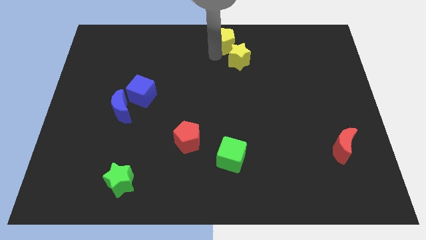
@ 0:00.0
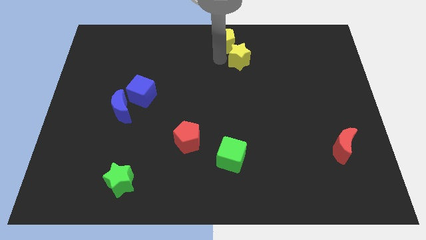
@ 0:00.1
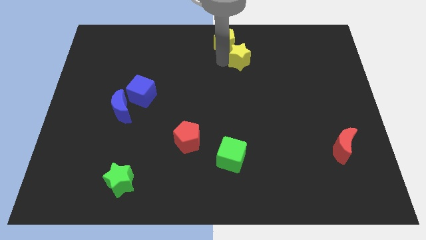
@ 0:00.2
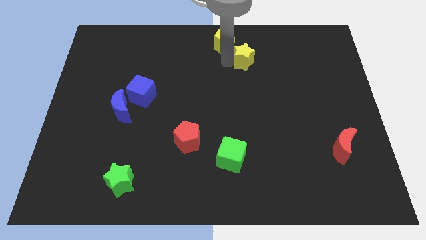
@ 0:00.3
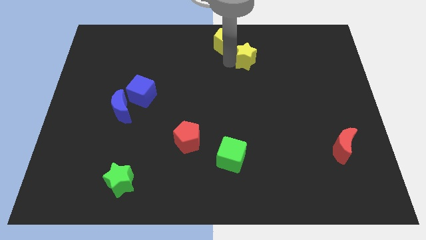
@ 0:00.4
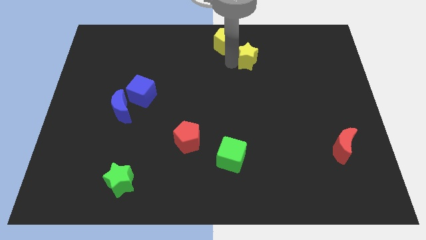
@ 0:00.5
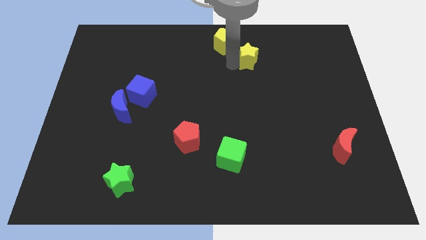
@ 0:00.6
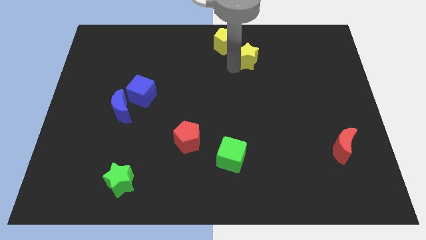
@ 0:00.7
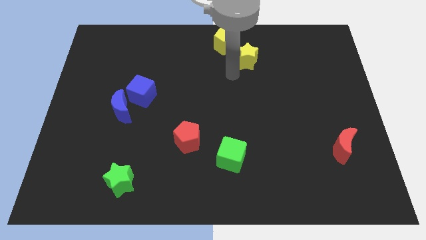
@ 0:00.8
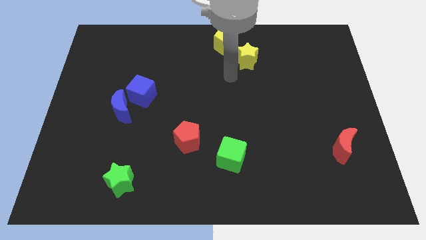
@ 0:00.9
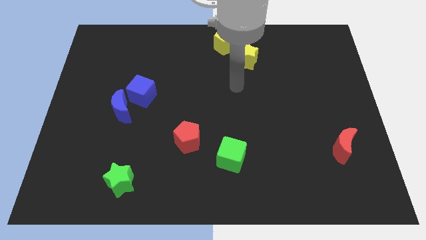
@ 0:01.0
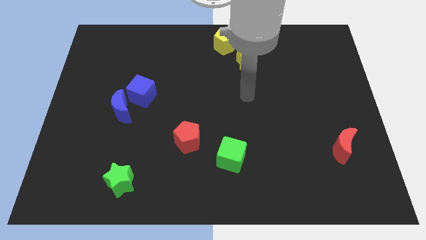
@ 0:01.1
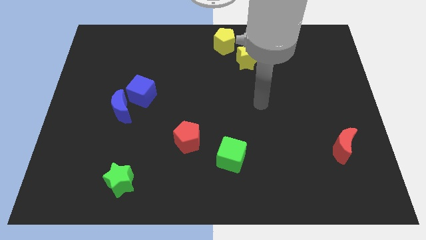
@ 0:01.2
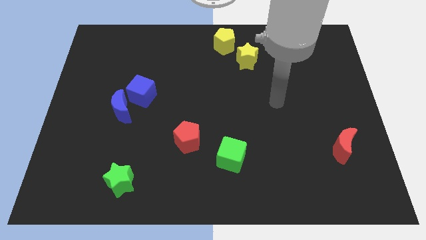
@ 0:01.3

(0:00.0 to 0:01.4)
move the yellow star slightly to the right

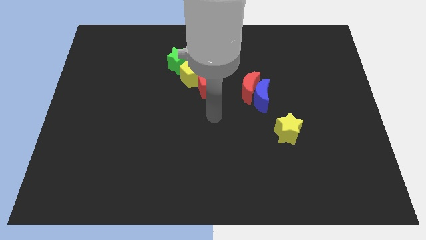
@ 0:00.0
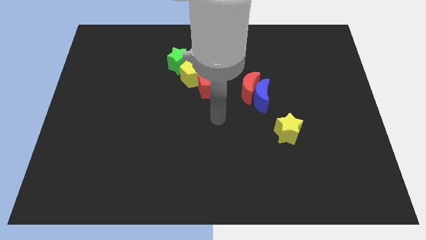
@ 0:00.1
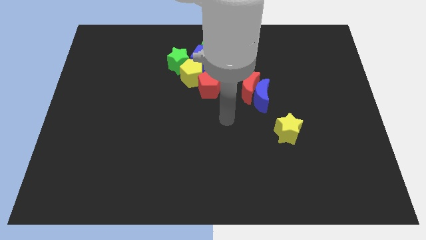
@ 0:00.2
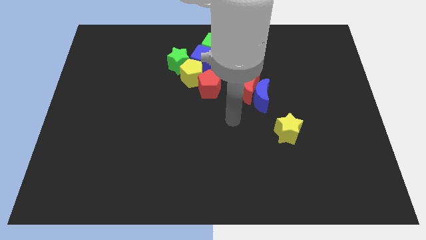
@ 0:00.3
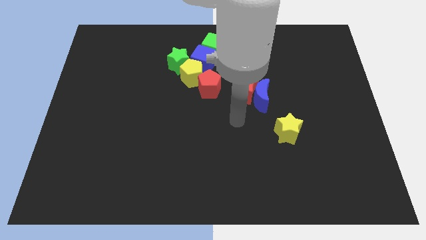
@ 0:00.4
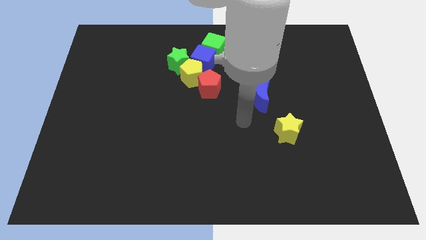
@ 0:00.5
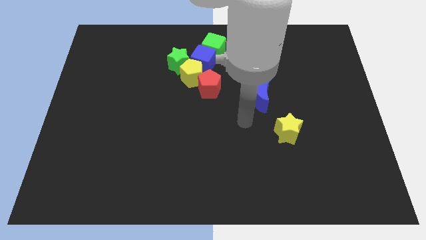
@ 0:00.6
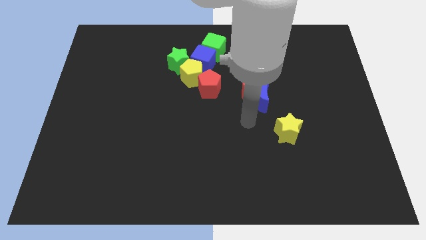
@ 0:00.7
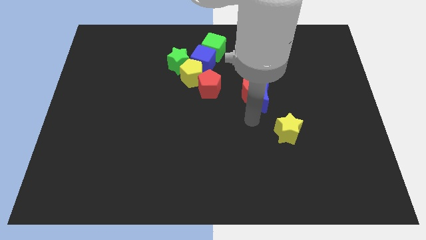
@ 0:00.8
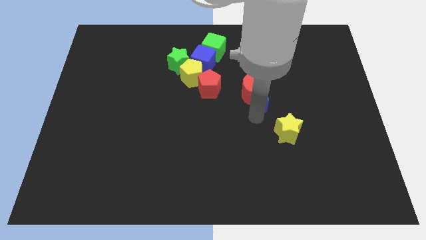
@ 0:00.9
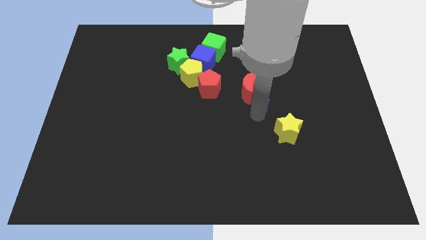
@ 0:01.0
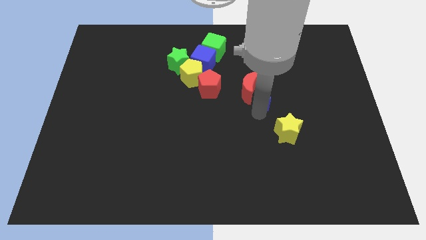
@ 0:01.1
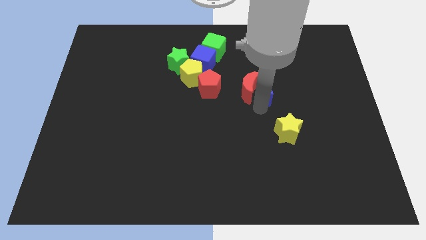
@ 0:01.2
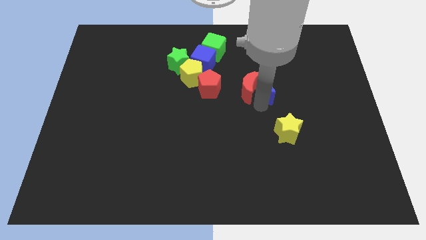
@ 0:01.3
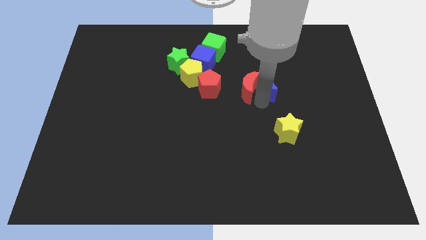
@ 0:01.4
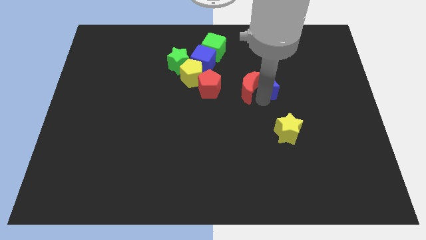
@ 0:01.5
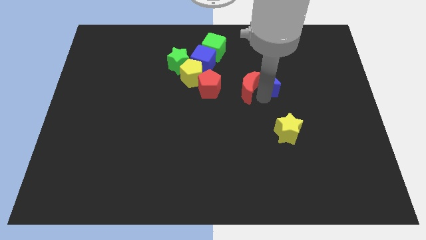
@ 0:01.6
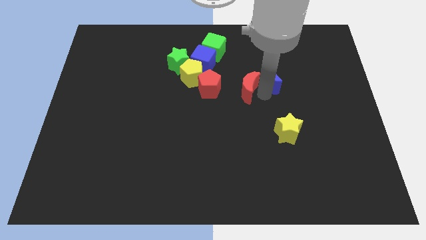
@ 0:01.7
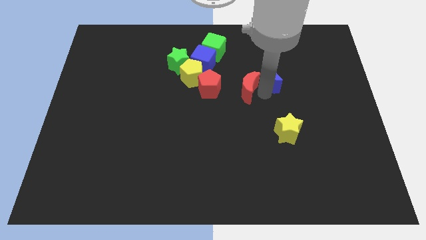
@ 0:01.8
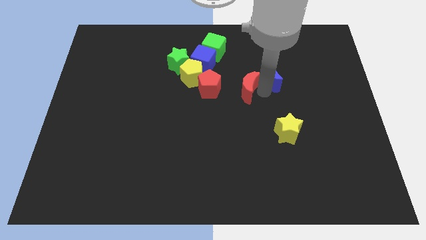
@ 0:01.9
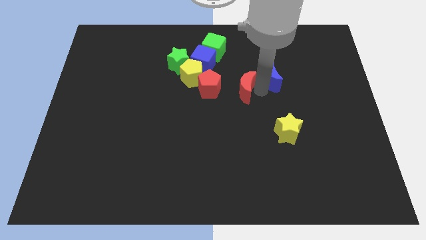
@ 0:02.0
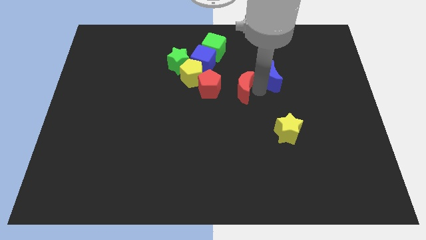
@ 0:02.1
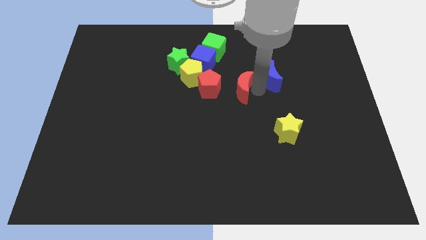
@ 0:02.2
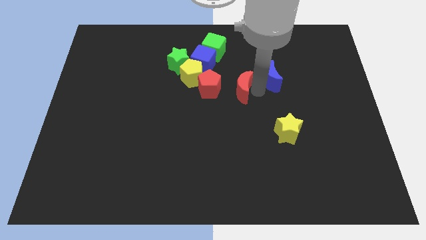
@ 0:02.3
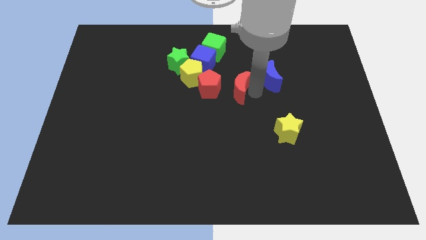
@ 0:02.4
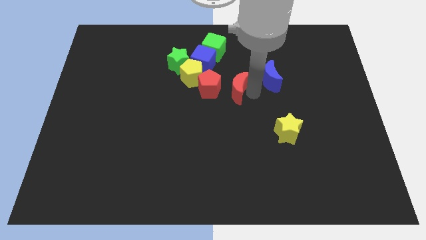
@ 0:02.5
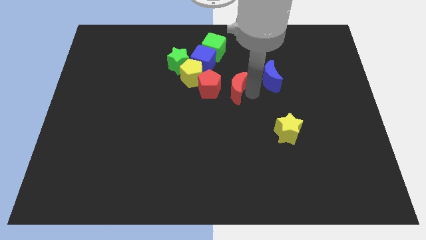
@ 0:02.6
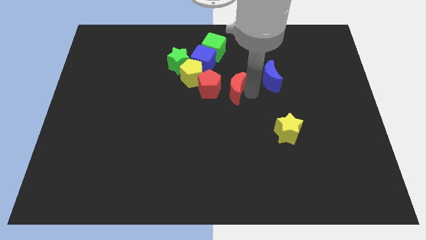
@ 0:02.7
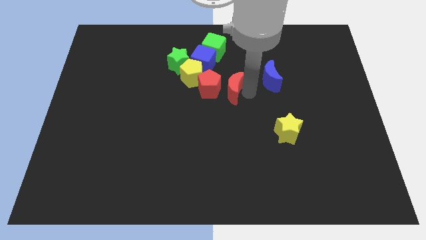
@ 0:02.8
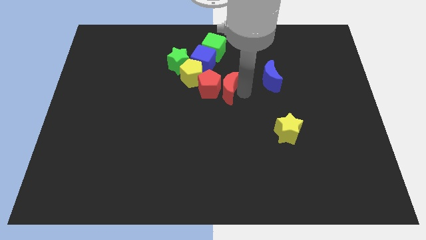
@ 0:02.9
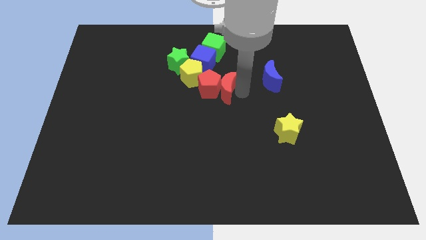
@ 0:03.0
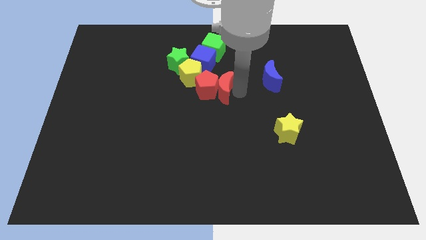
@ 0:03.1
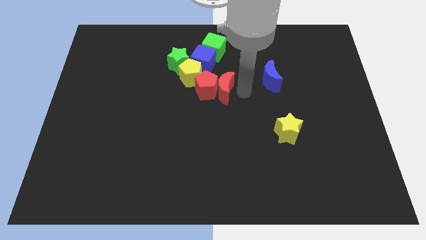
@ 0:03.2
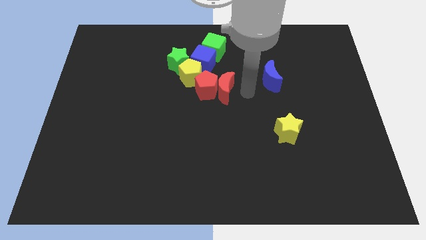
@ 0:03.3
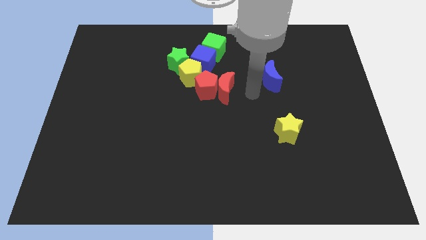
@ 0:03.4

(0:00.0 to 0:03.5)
push the red crescent into the red pentagon

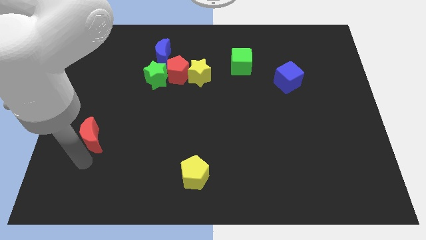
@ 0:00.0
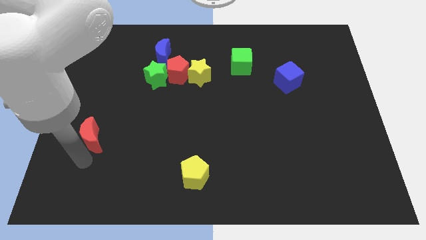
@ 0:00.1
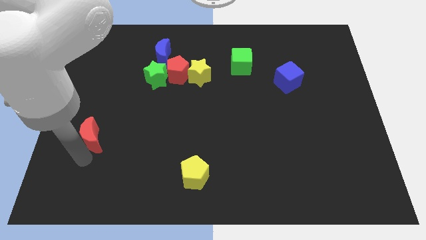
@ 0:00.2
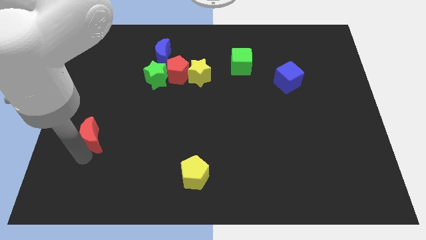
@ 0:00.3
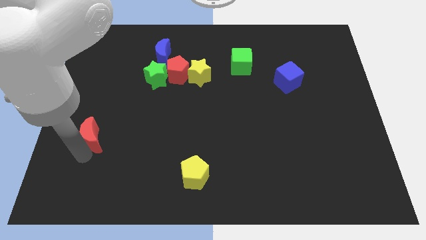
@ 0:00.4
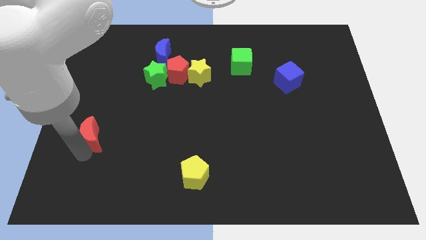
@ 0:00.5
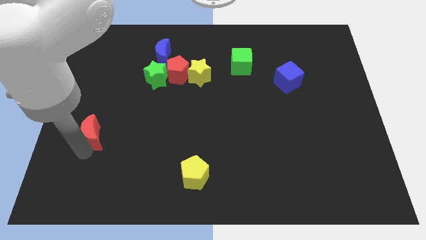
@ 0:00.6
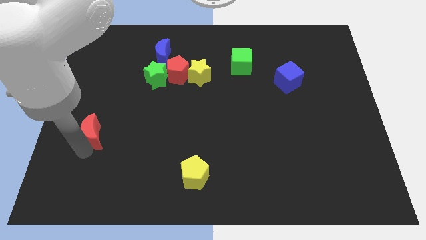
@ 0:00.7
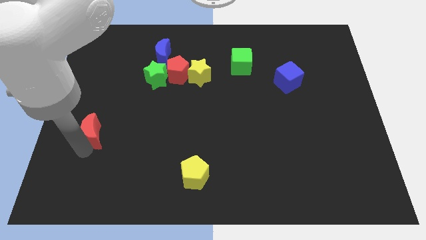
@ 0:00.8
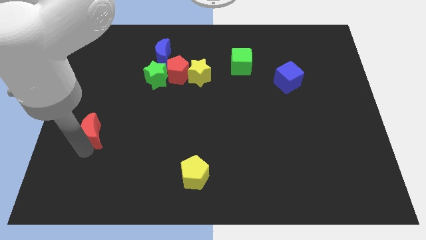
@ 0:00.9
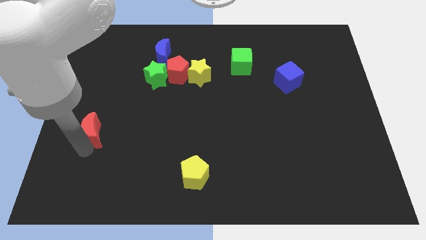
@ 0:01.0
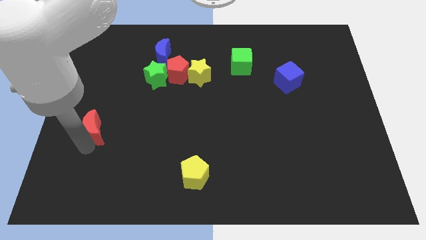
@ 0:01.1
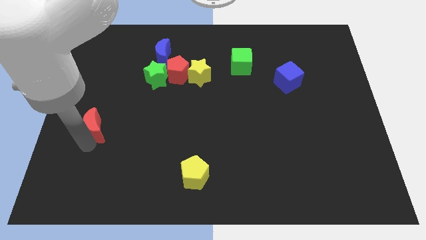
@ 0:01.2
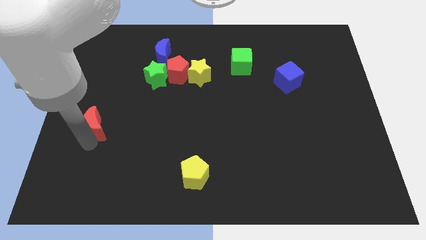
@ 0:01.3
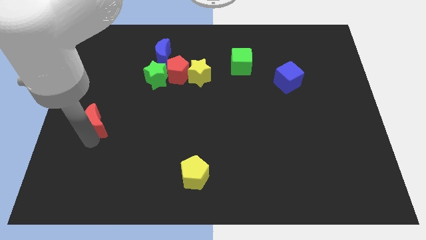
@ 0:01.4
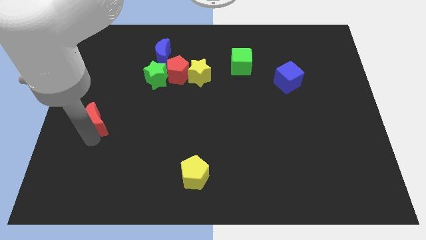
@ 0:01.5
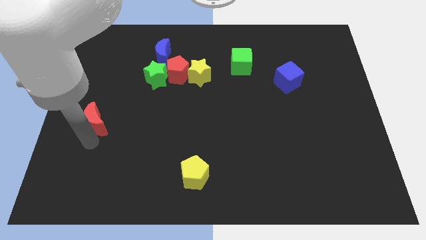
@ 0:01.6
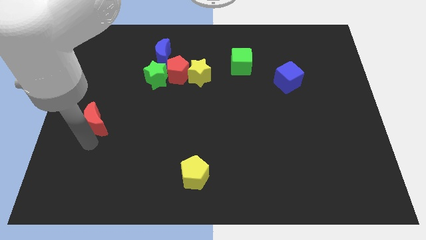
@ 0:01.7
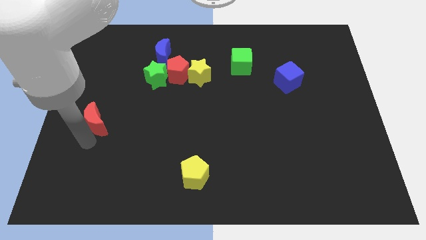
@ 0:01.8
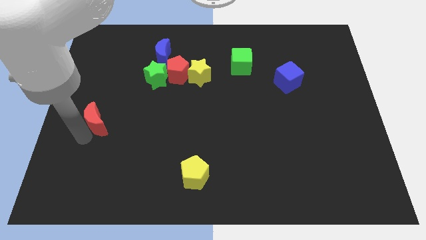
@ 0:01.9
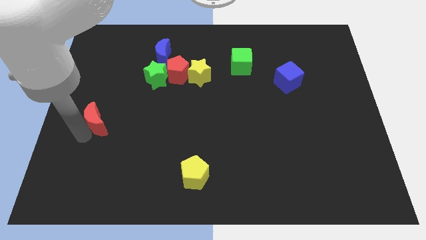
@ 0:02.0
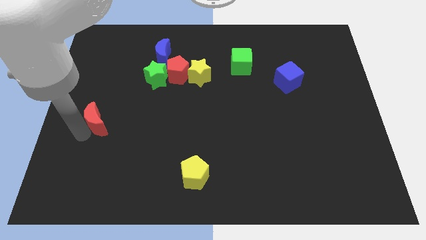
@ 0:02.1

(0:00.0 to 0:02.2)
push red moon slightly upwards

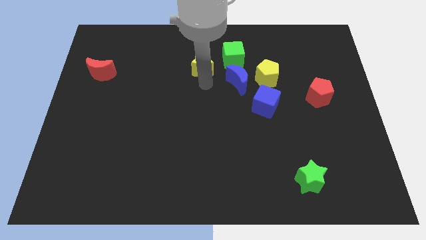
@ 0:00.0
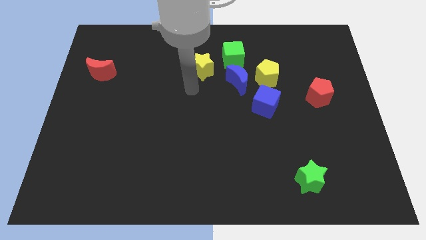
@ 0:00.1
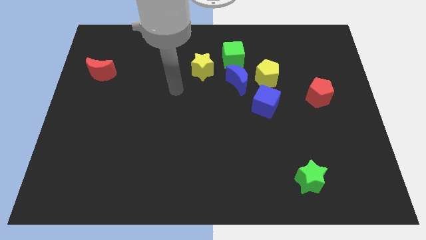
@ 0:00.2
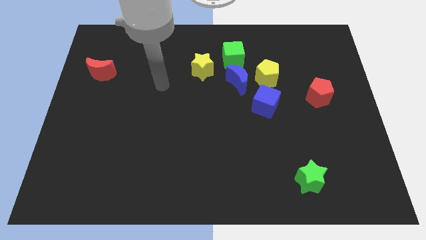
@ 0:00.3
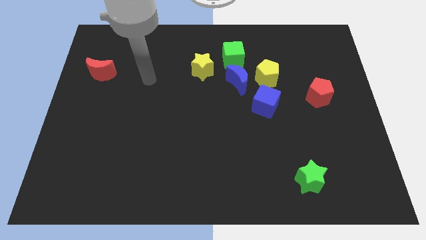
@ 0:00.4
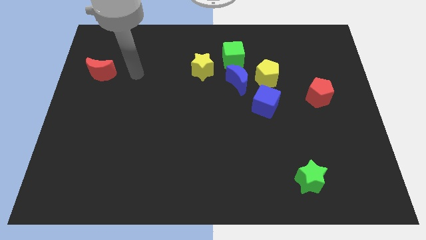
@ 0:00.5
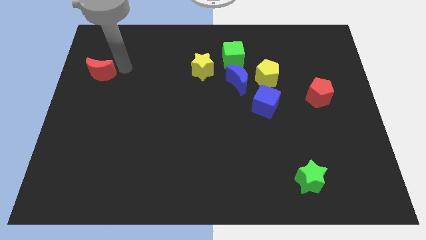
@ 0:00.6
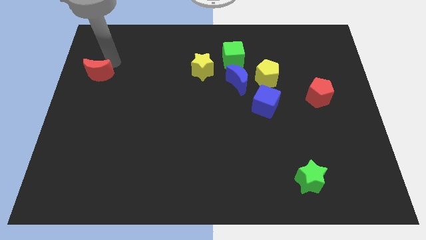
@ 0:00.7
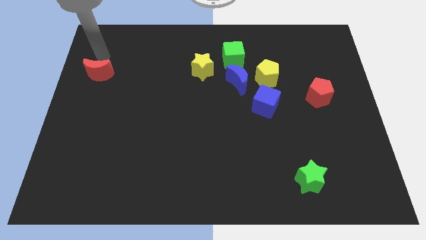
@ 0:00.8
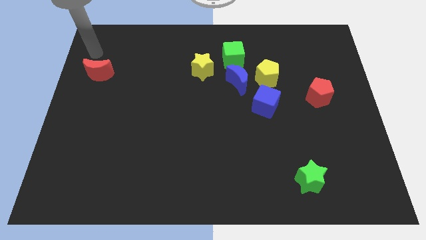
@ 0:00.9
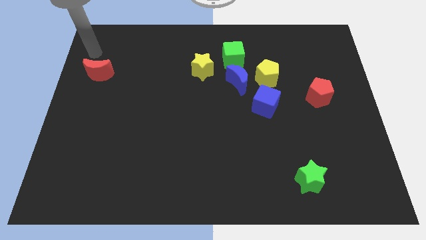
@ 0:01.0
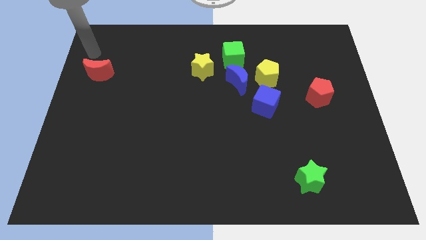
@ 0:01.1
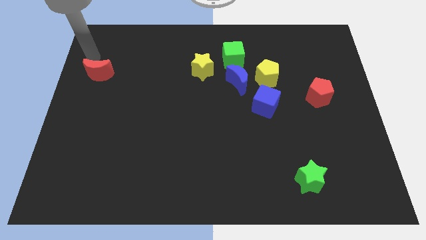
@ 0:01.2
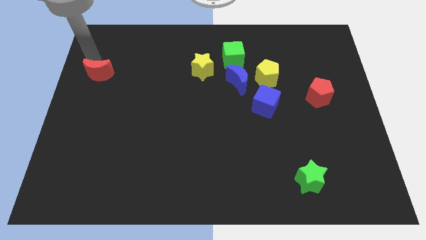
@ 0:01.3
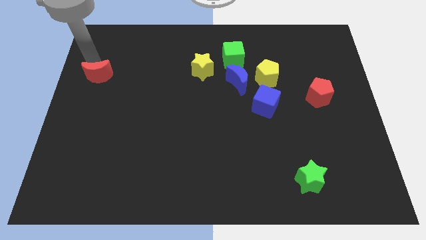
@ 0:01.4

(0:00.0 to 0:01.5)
tap the top side of the red moon

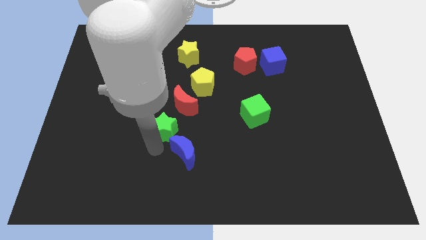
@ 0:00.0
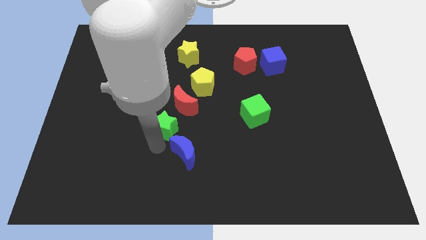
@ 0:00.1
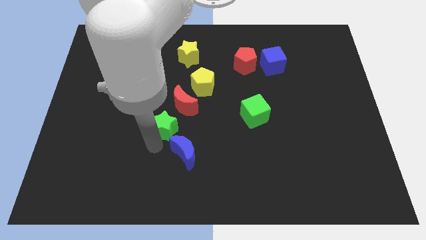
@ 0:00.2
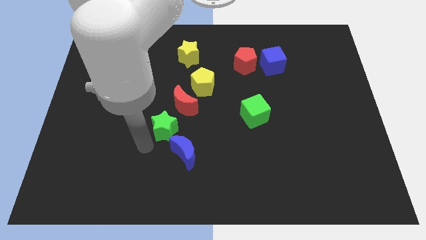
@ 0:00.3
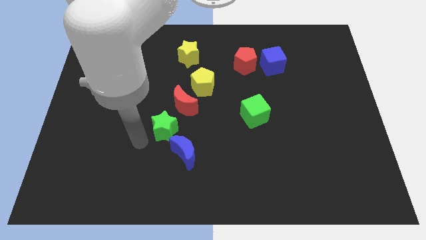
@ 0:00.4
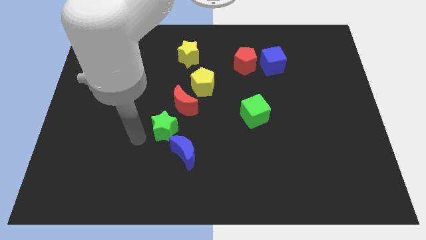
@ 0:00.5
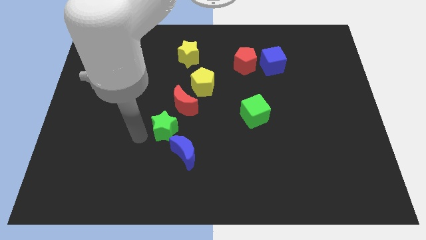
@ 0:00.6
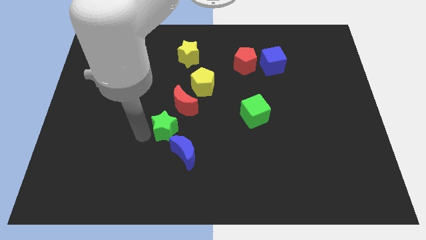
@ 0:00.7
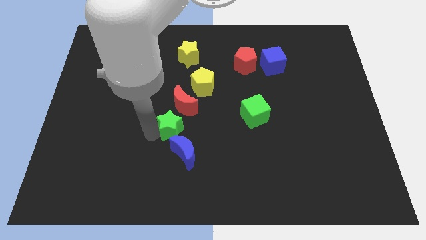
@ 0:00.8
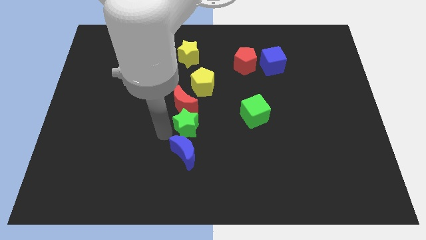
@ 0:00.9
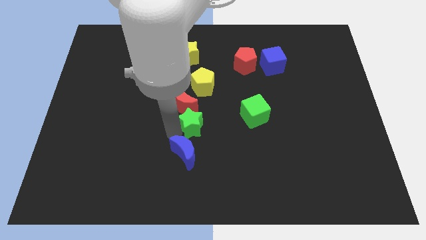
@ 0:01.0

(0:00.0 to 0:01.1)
place the green star in between the moons
